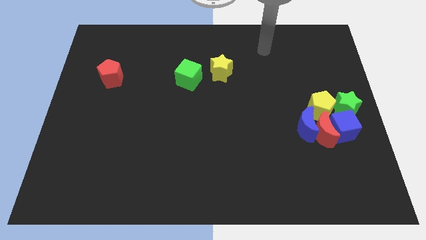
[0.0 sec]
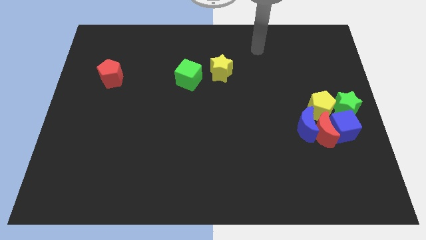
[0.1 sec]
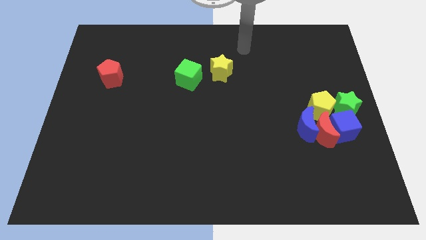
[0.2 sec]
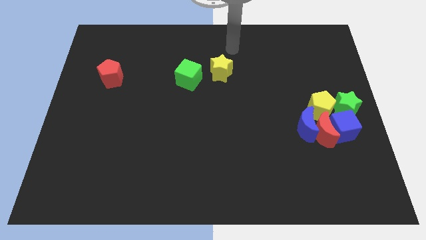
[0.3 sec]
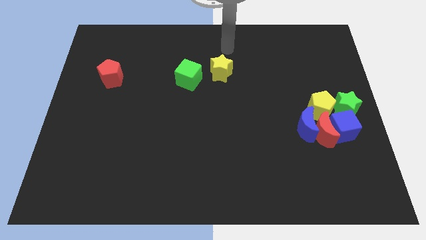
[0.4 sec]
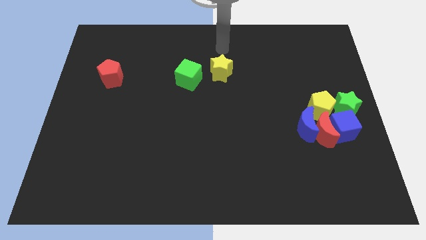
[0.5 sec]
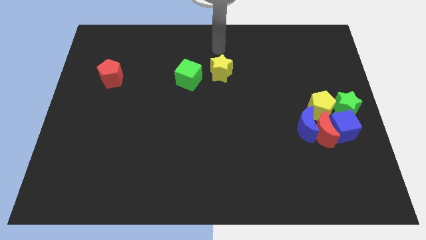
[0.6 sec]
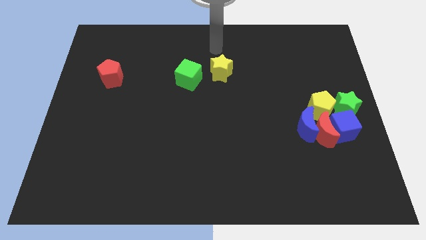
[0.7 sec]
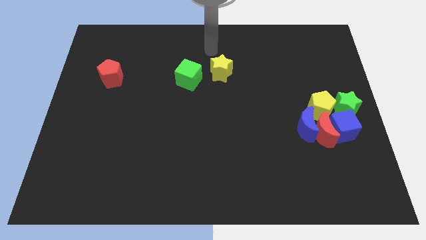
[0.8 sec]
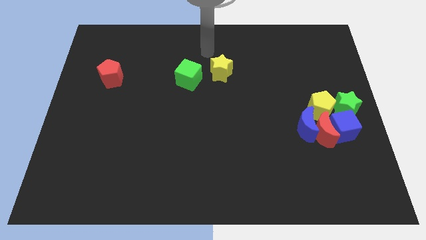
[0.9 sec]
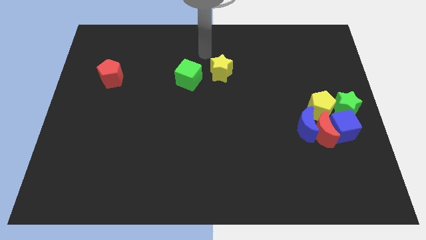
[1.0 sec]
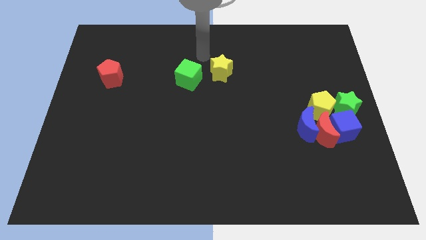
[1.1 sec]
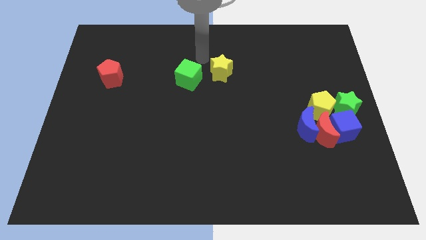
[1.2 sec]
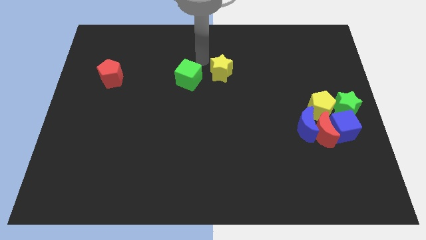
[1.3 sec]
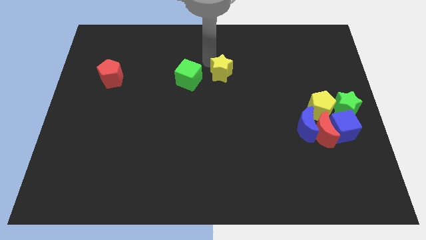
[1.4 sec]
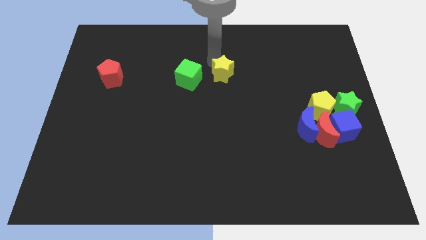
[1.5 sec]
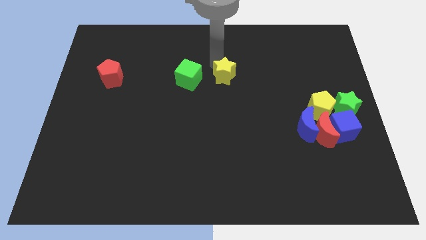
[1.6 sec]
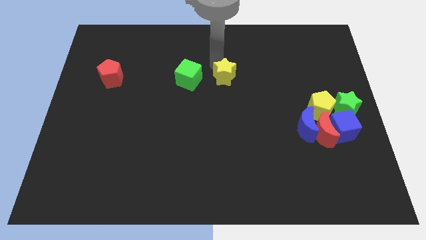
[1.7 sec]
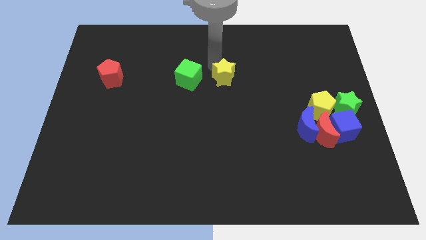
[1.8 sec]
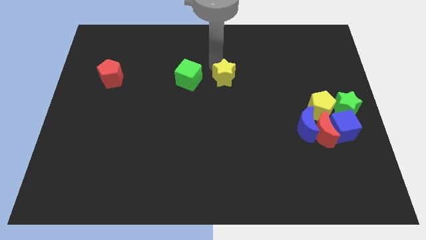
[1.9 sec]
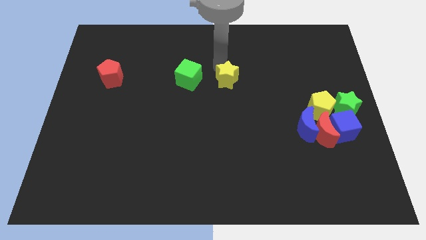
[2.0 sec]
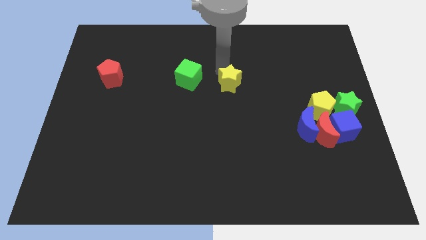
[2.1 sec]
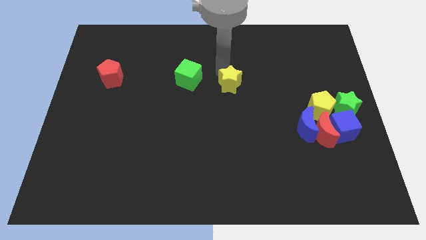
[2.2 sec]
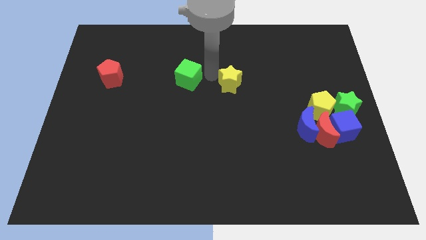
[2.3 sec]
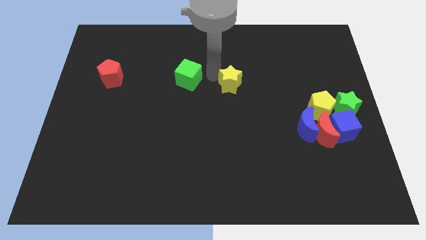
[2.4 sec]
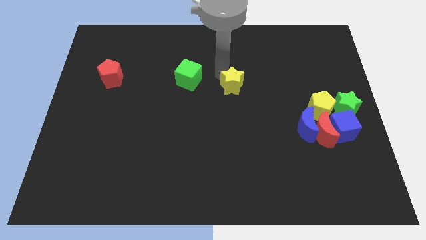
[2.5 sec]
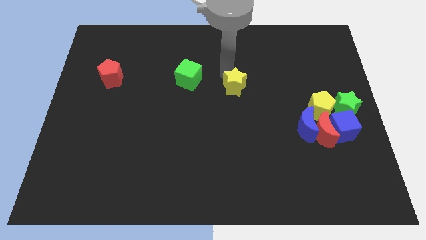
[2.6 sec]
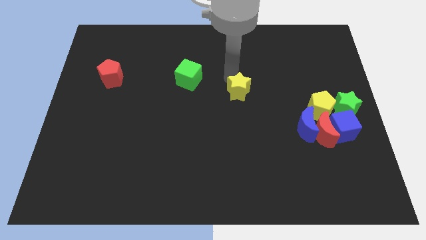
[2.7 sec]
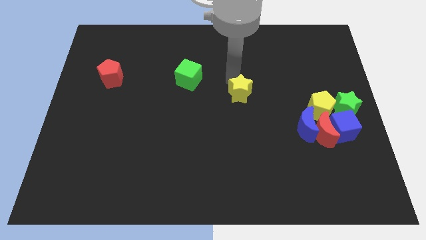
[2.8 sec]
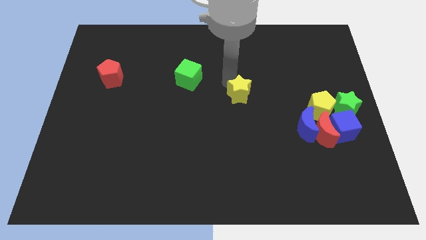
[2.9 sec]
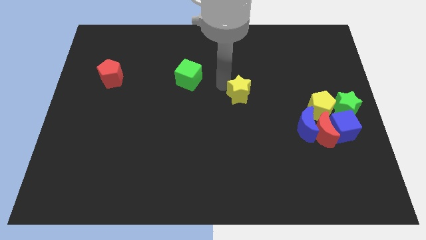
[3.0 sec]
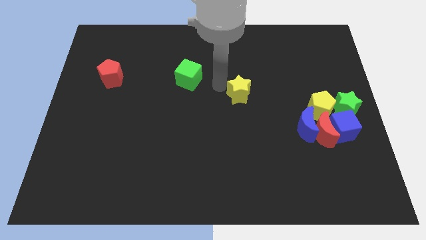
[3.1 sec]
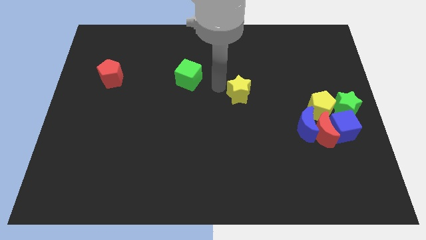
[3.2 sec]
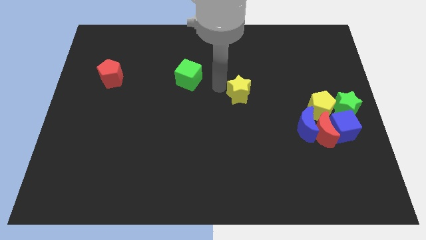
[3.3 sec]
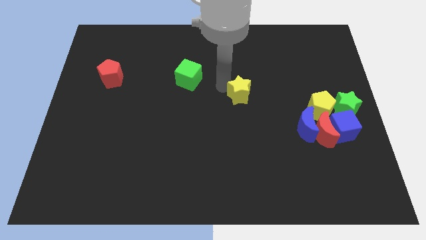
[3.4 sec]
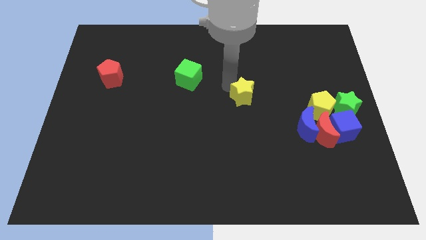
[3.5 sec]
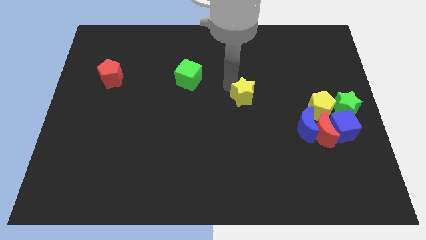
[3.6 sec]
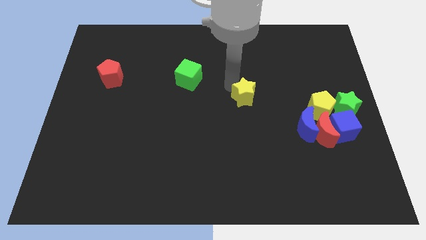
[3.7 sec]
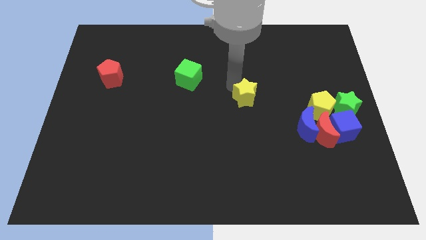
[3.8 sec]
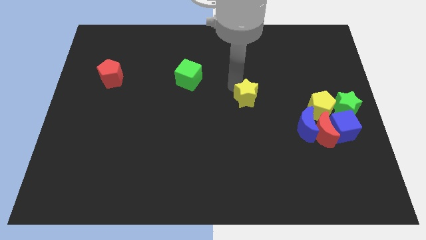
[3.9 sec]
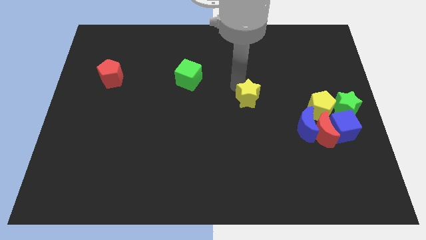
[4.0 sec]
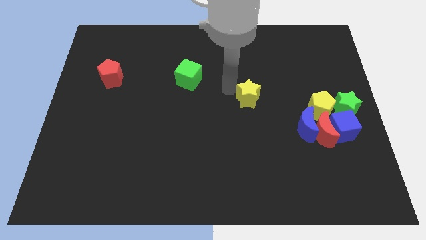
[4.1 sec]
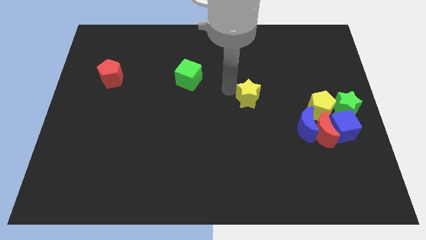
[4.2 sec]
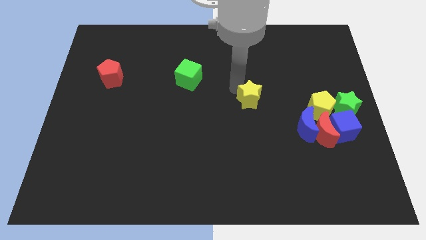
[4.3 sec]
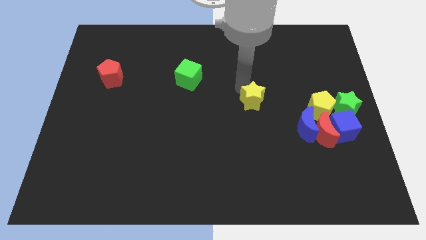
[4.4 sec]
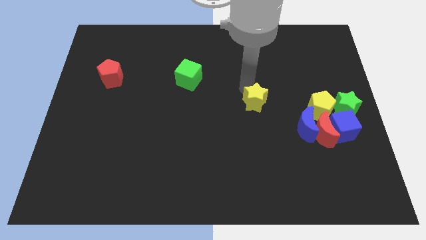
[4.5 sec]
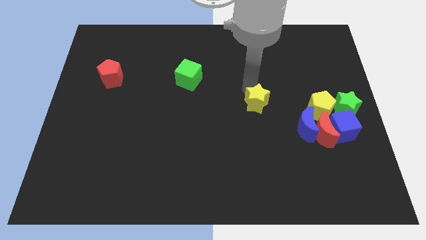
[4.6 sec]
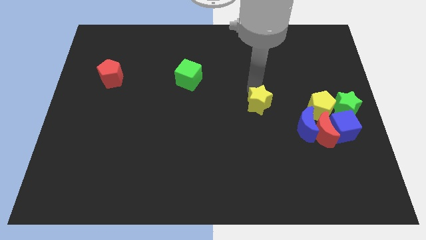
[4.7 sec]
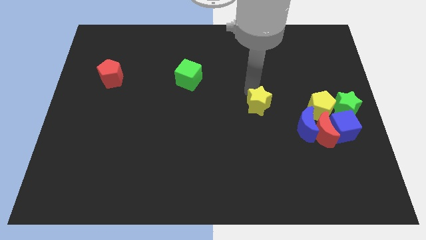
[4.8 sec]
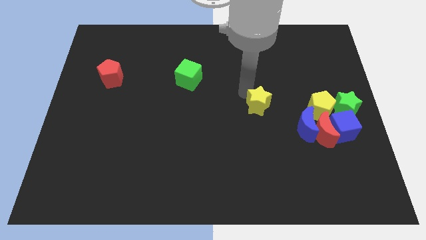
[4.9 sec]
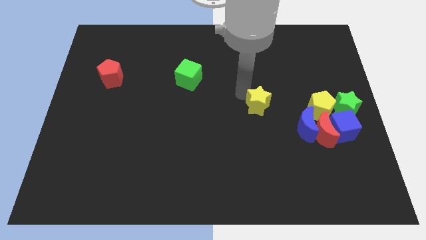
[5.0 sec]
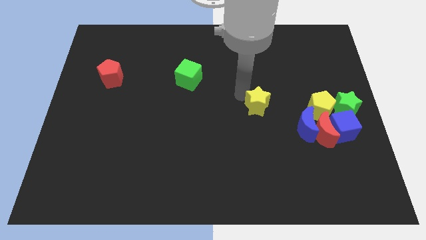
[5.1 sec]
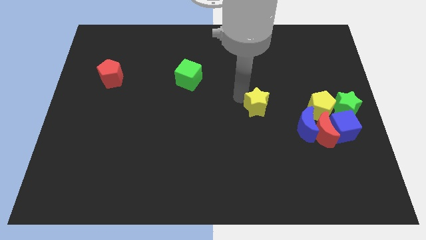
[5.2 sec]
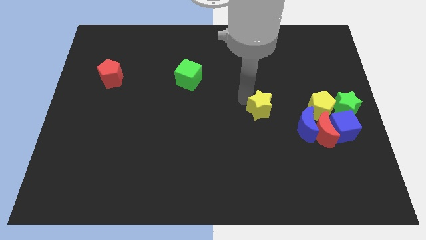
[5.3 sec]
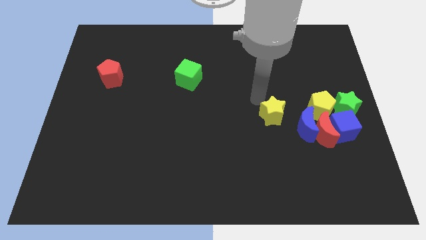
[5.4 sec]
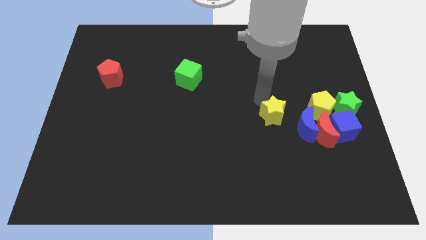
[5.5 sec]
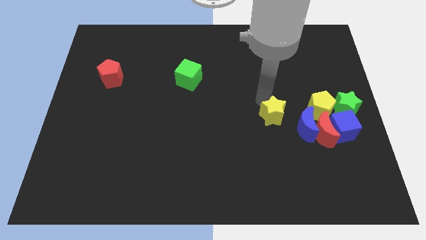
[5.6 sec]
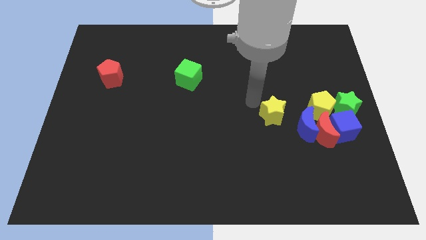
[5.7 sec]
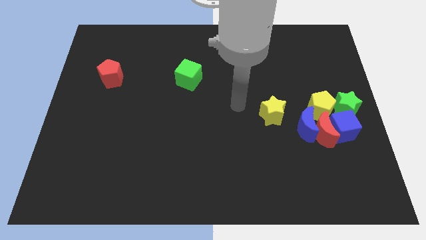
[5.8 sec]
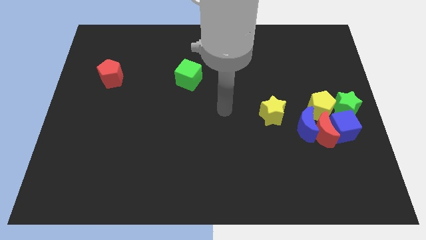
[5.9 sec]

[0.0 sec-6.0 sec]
take the yellow star towards the group of blocks

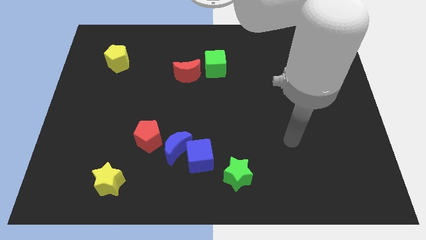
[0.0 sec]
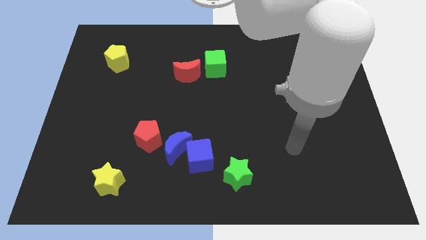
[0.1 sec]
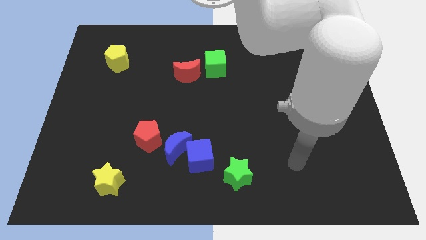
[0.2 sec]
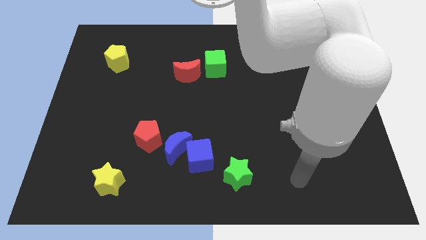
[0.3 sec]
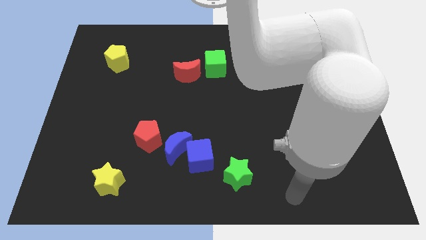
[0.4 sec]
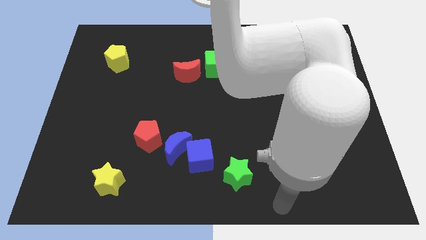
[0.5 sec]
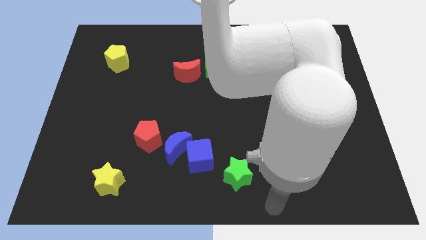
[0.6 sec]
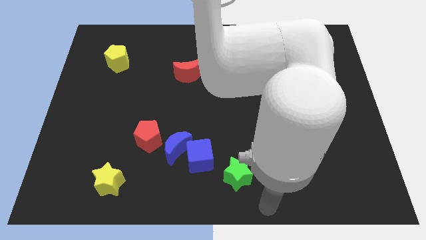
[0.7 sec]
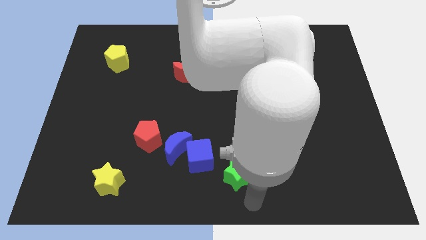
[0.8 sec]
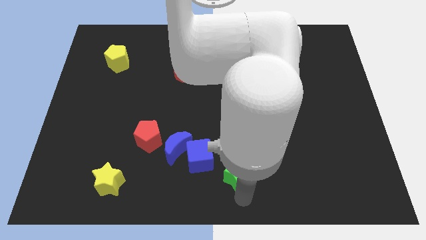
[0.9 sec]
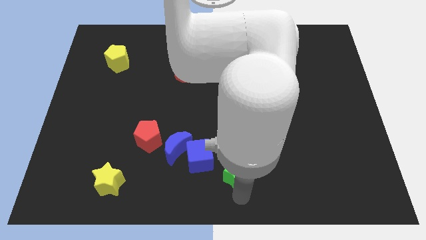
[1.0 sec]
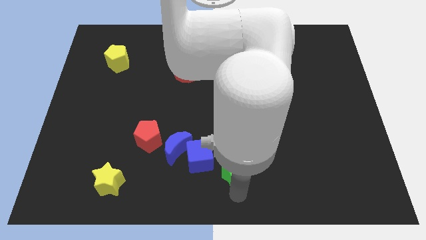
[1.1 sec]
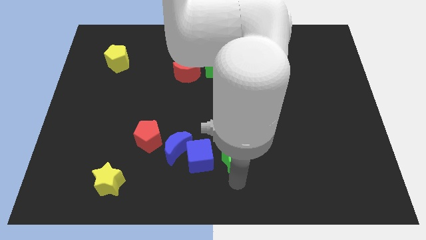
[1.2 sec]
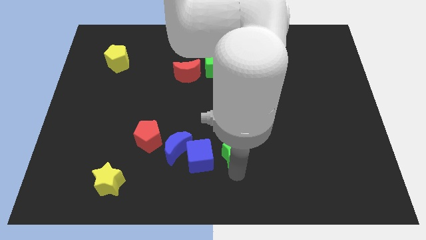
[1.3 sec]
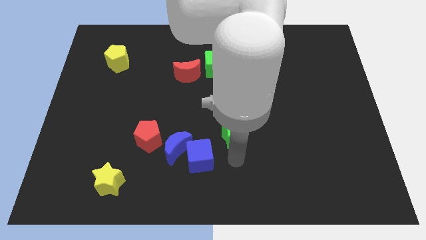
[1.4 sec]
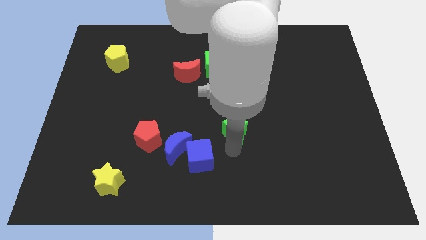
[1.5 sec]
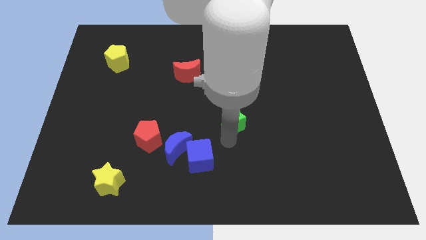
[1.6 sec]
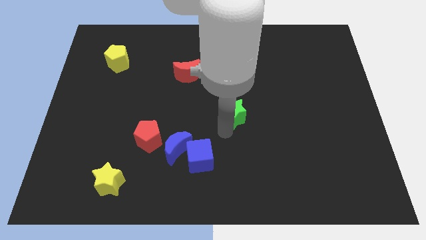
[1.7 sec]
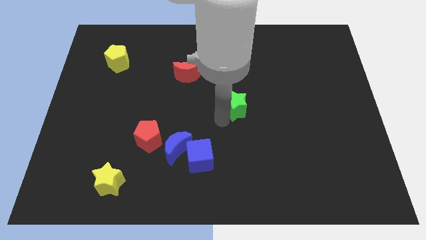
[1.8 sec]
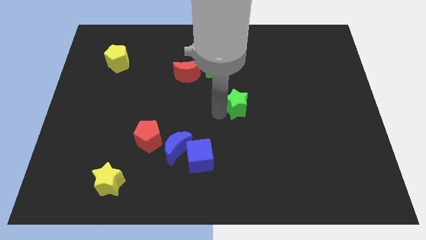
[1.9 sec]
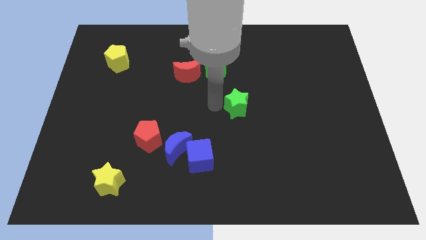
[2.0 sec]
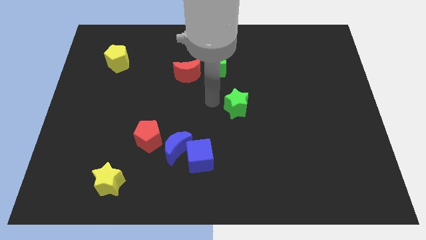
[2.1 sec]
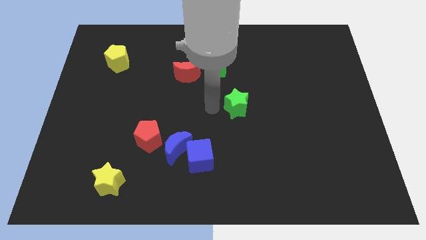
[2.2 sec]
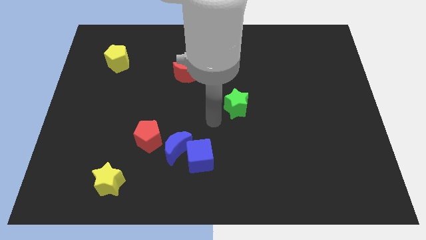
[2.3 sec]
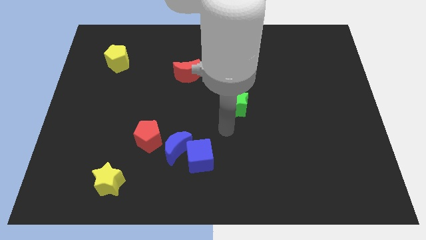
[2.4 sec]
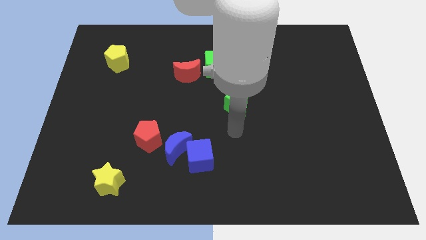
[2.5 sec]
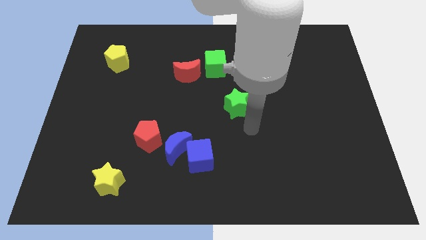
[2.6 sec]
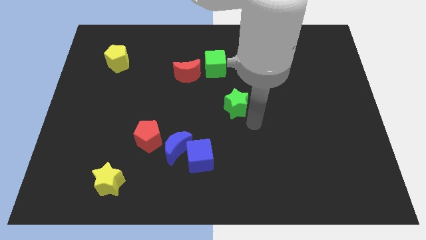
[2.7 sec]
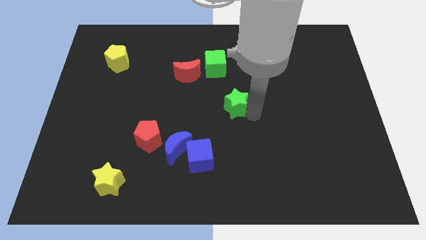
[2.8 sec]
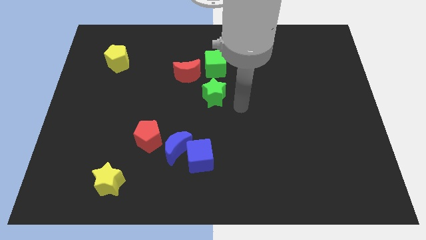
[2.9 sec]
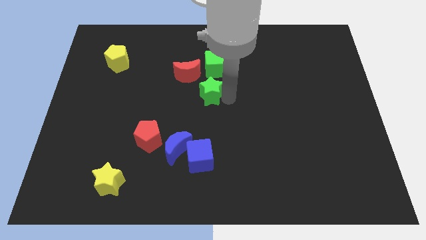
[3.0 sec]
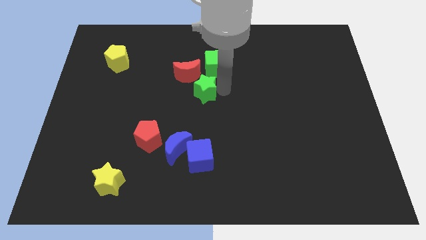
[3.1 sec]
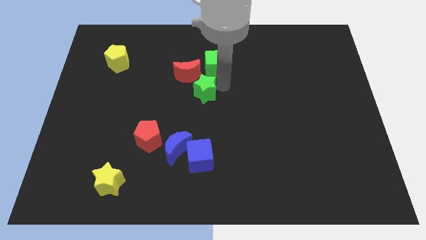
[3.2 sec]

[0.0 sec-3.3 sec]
place the green star below the green cube
